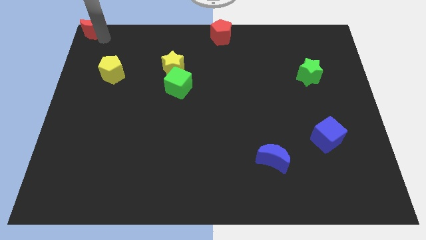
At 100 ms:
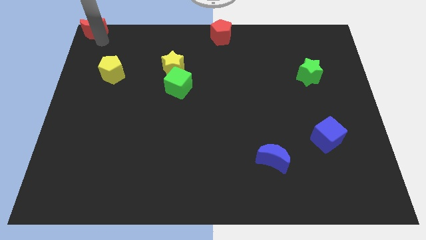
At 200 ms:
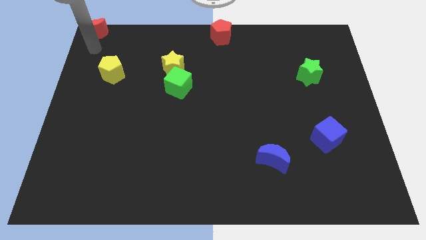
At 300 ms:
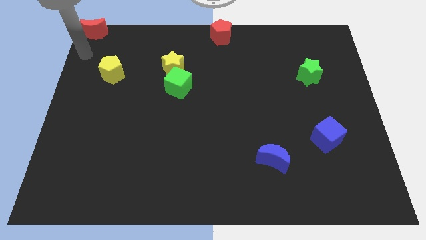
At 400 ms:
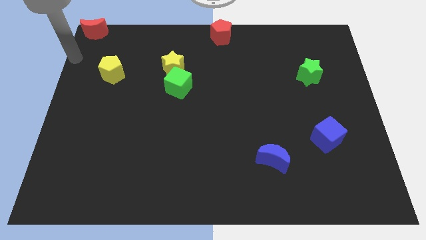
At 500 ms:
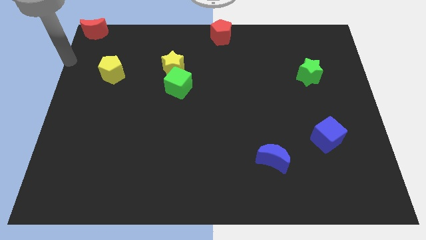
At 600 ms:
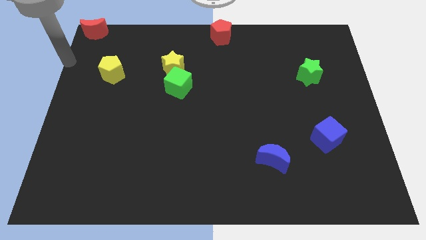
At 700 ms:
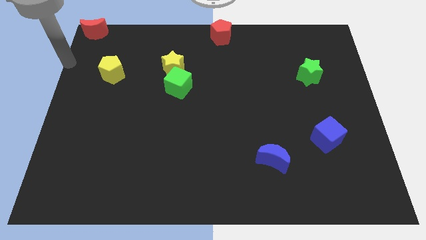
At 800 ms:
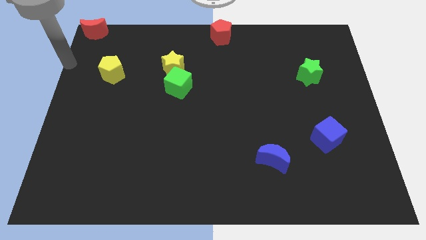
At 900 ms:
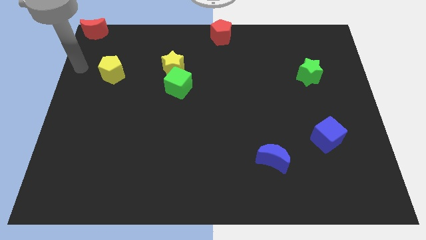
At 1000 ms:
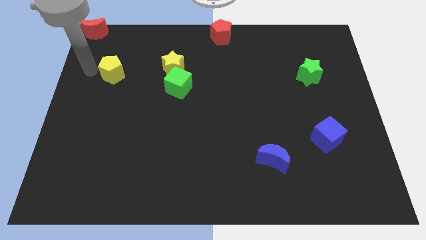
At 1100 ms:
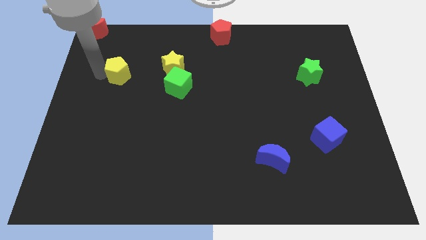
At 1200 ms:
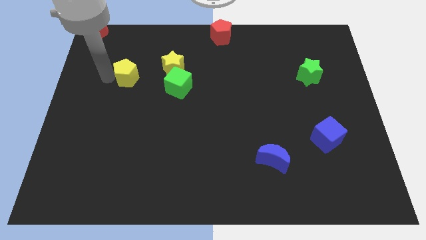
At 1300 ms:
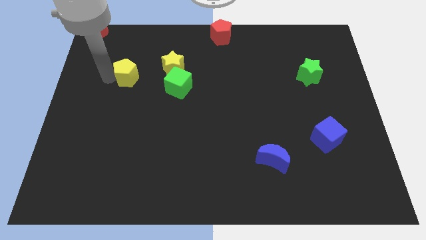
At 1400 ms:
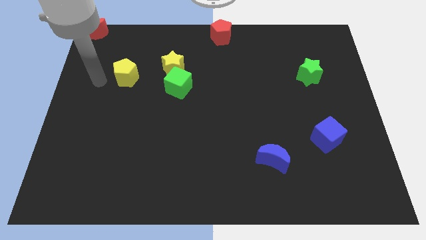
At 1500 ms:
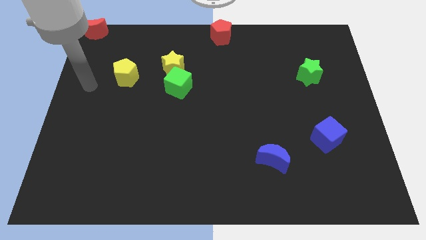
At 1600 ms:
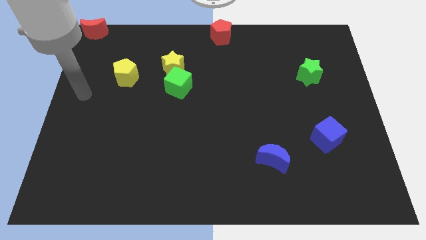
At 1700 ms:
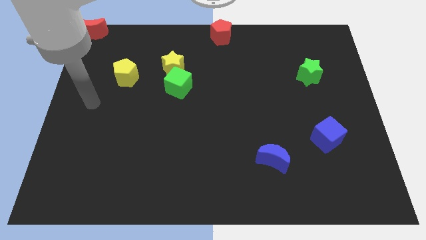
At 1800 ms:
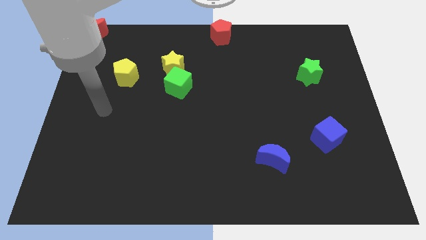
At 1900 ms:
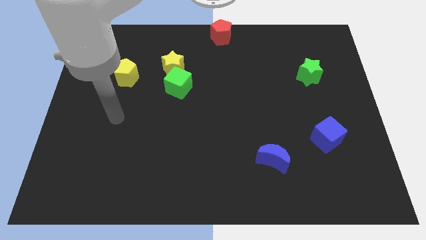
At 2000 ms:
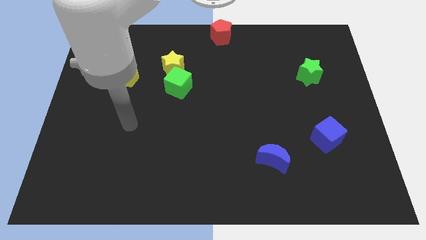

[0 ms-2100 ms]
push the yellow pentagon to the left of yellow star

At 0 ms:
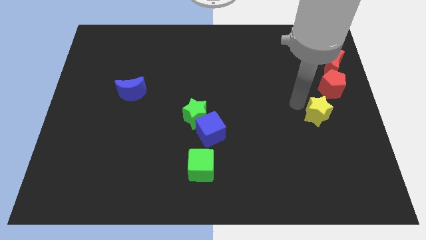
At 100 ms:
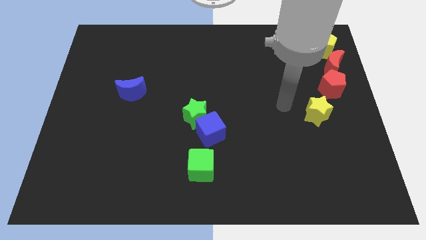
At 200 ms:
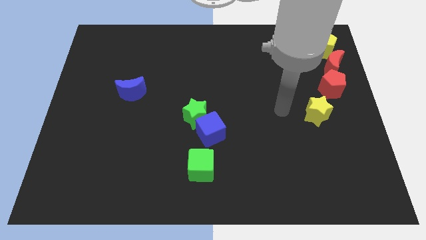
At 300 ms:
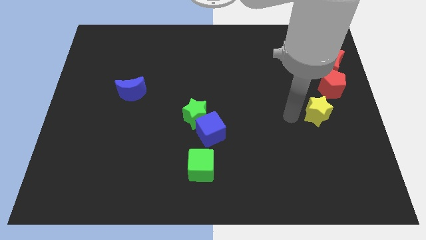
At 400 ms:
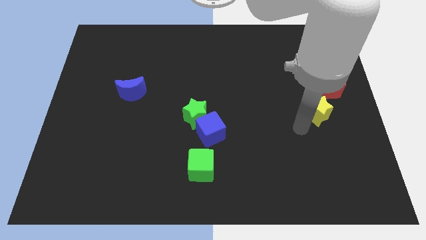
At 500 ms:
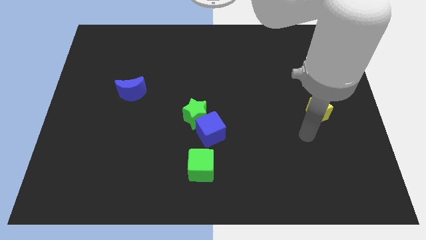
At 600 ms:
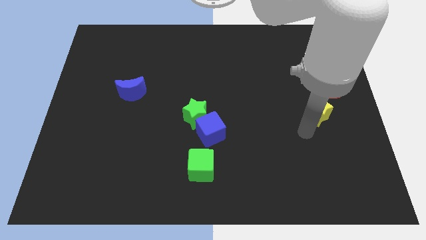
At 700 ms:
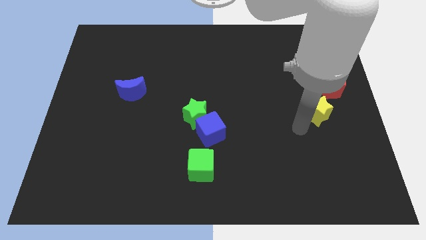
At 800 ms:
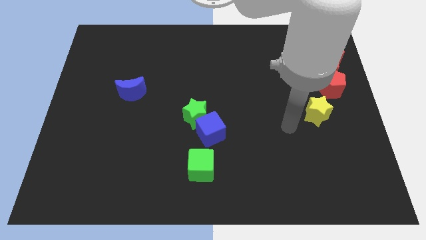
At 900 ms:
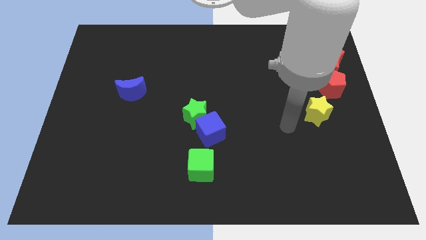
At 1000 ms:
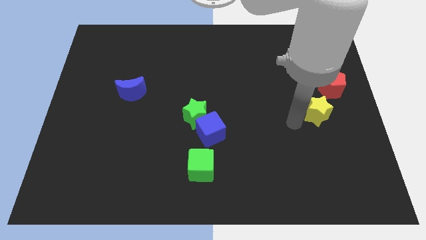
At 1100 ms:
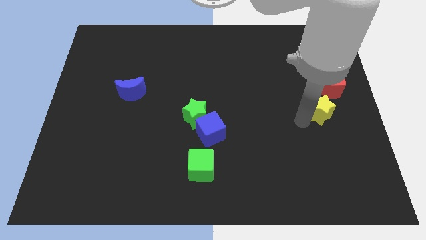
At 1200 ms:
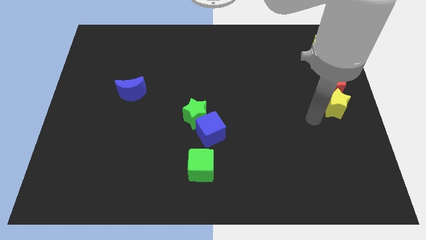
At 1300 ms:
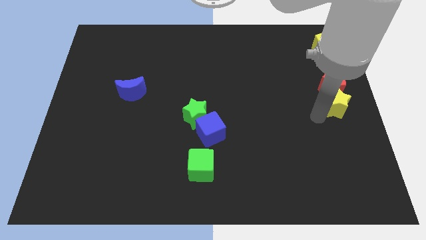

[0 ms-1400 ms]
put yellow star vertically below the red pentagon

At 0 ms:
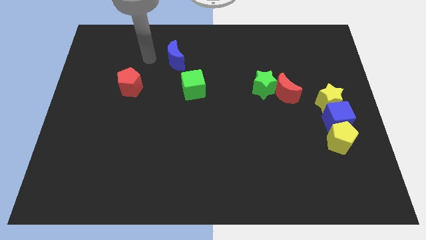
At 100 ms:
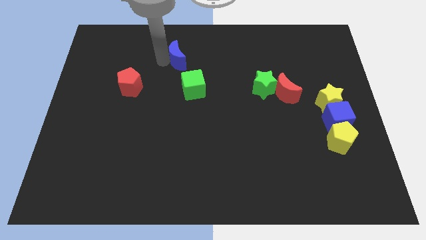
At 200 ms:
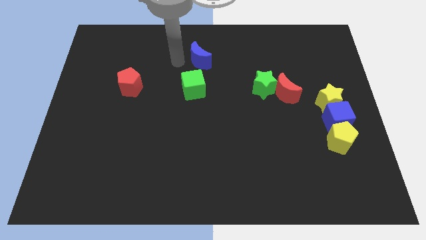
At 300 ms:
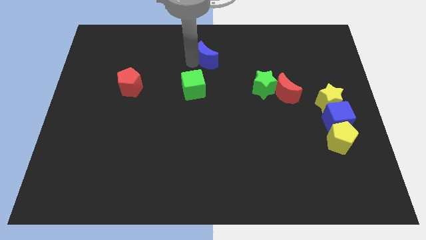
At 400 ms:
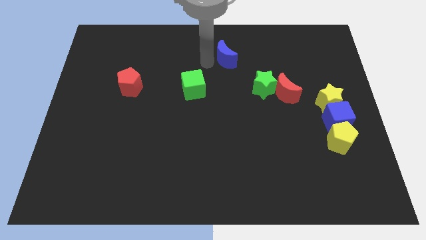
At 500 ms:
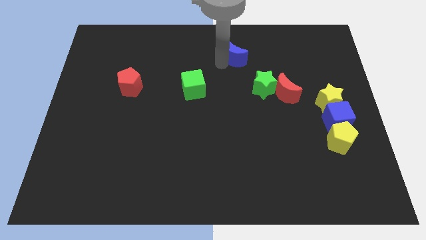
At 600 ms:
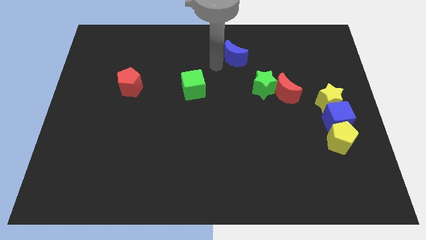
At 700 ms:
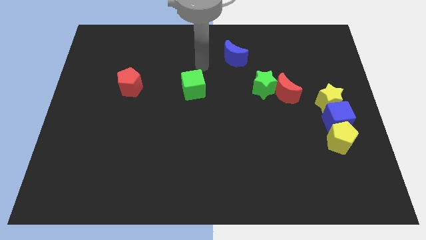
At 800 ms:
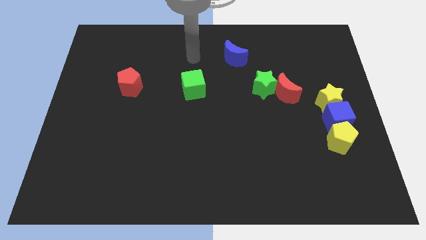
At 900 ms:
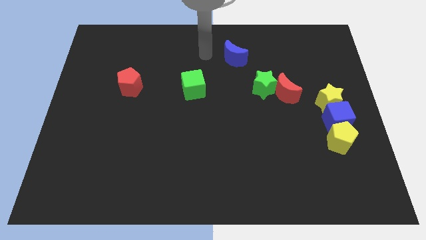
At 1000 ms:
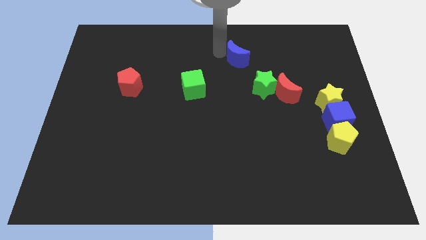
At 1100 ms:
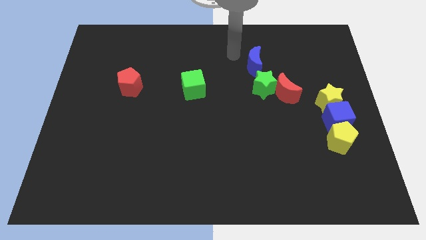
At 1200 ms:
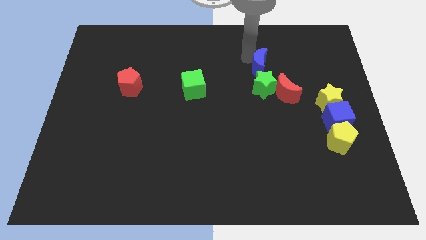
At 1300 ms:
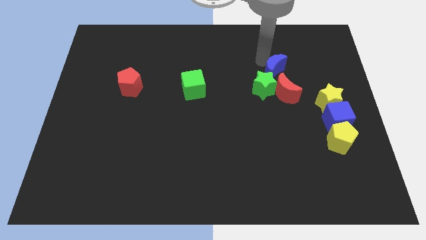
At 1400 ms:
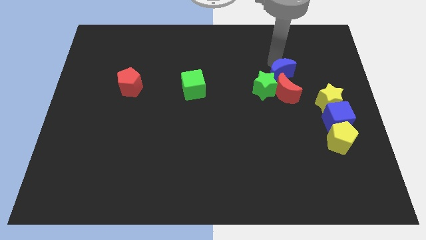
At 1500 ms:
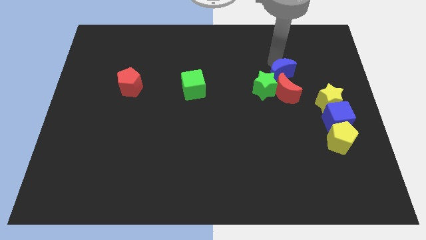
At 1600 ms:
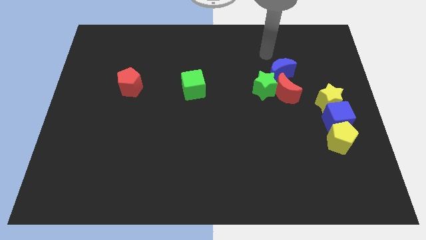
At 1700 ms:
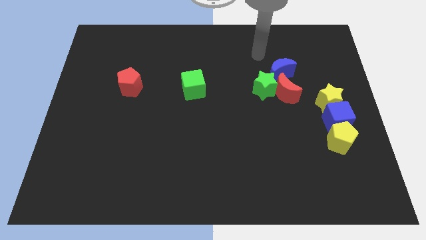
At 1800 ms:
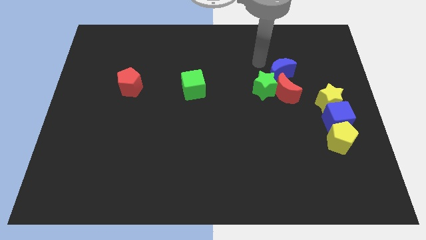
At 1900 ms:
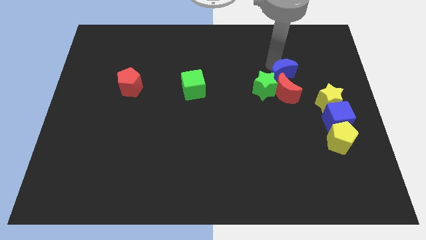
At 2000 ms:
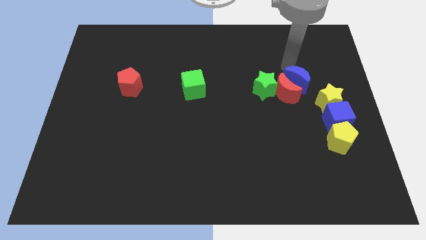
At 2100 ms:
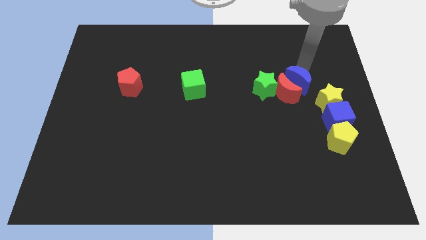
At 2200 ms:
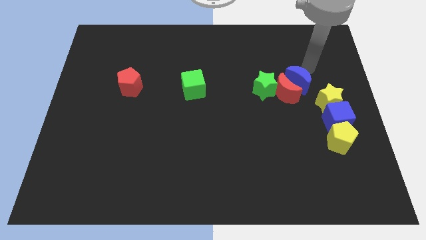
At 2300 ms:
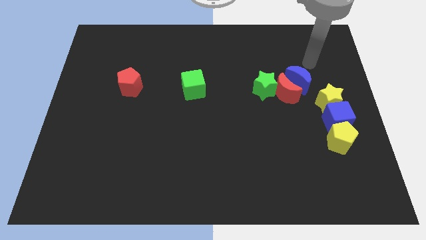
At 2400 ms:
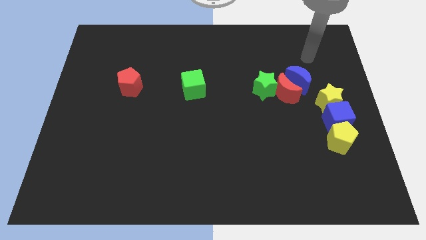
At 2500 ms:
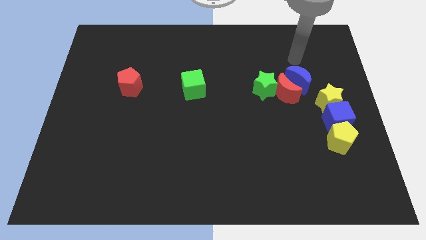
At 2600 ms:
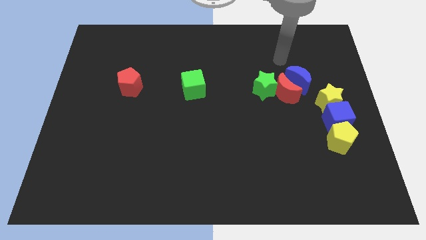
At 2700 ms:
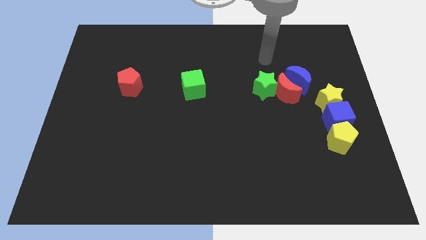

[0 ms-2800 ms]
move blue crescent above red moon

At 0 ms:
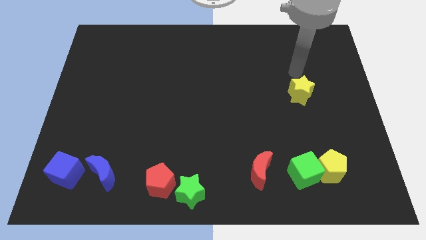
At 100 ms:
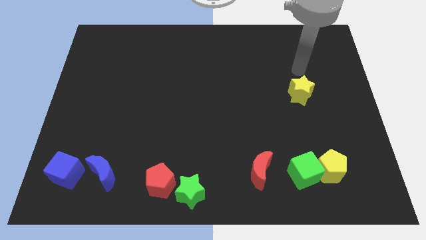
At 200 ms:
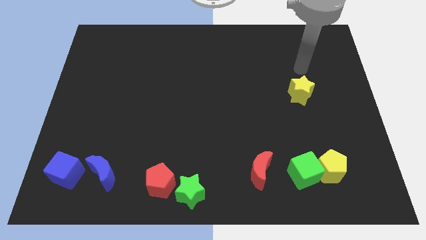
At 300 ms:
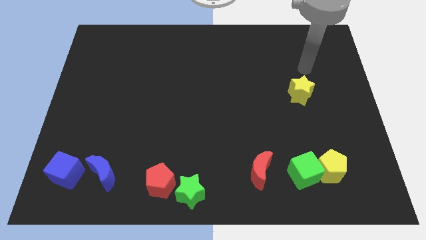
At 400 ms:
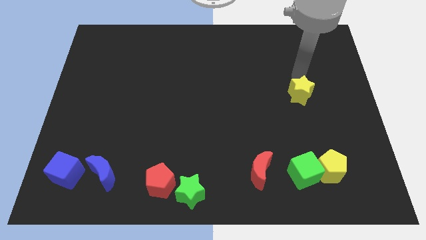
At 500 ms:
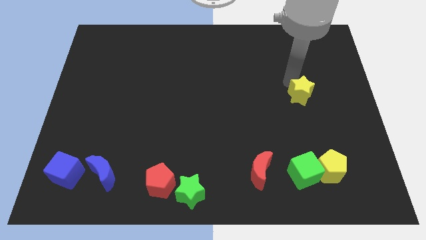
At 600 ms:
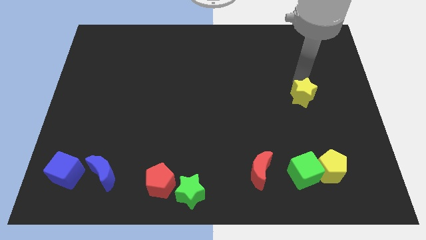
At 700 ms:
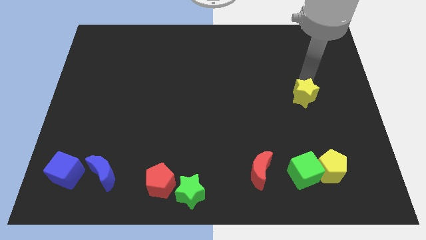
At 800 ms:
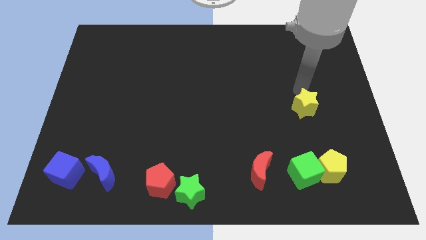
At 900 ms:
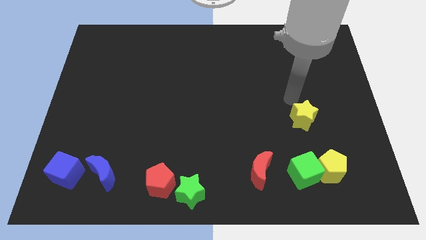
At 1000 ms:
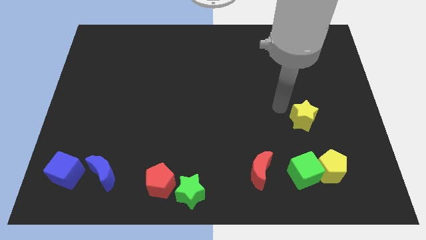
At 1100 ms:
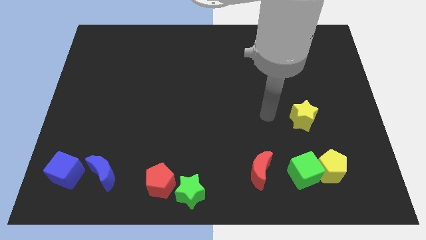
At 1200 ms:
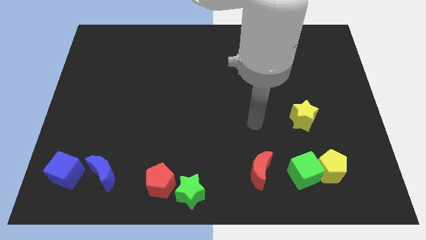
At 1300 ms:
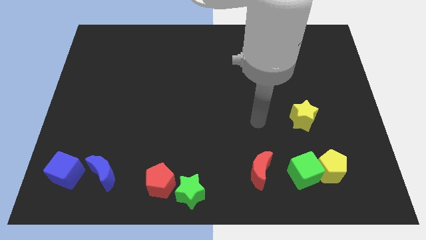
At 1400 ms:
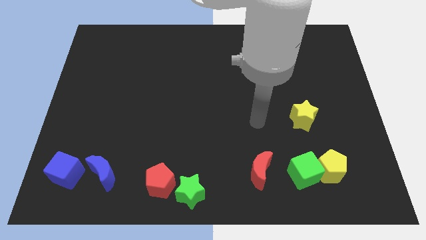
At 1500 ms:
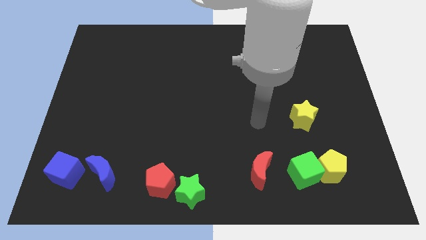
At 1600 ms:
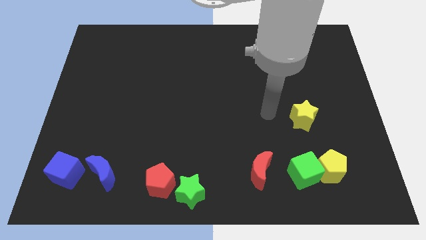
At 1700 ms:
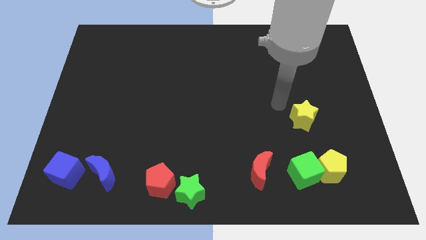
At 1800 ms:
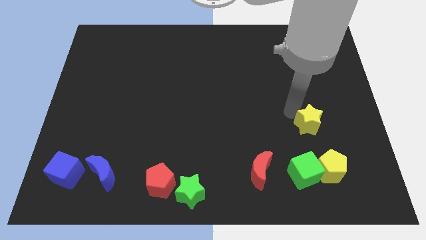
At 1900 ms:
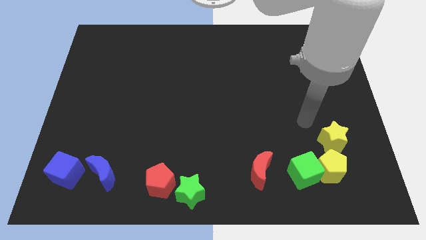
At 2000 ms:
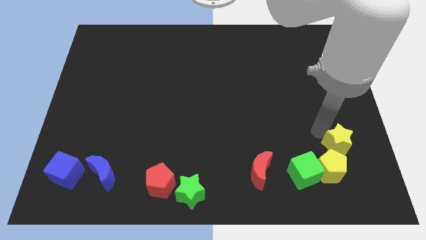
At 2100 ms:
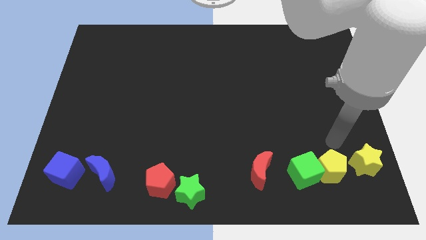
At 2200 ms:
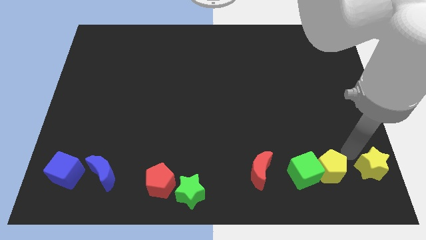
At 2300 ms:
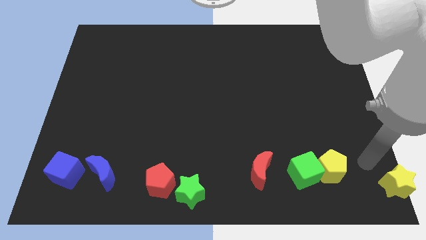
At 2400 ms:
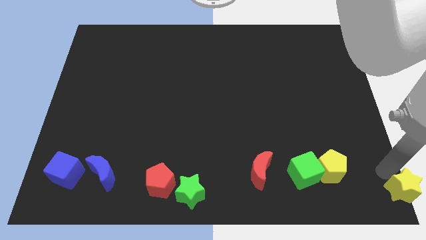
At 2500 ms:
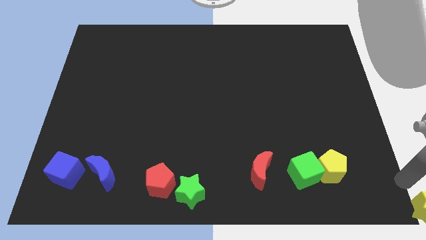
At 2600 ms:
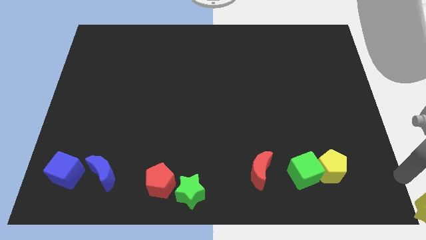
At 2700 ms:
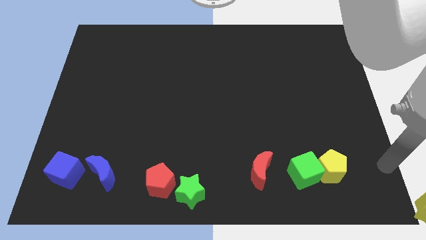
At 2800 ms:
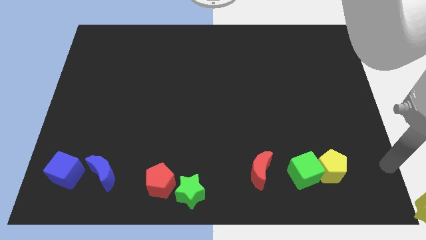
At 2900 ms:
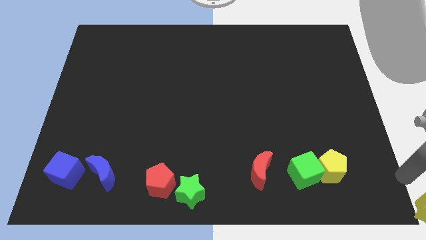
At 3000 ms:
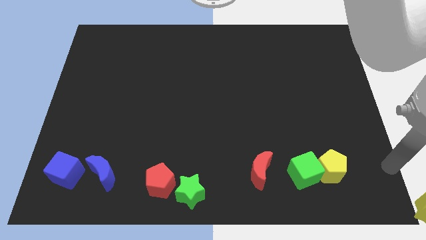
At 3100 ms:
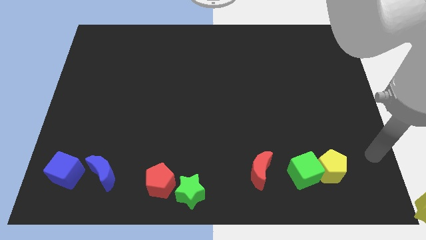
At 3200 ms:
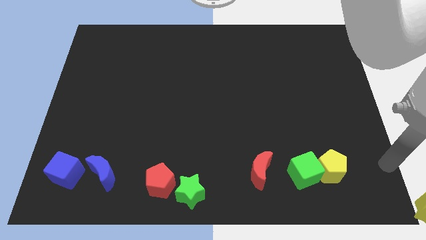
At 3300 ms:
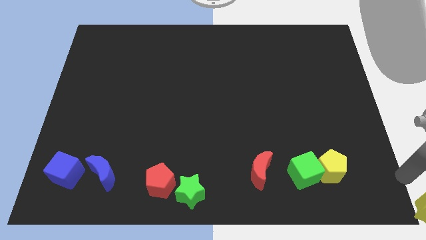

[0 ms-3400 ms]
push the yellow star to the bottom right corner of the board
